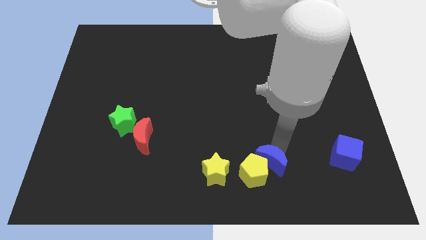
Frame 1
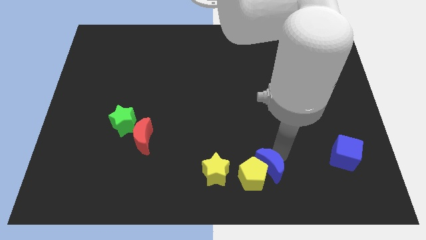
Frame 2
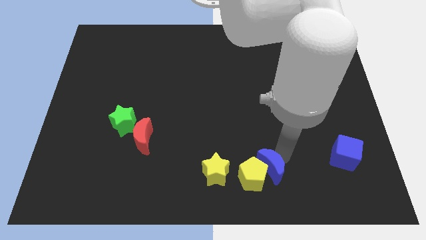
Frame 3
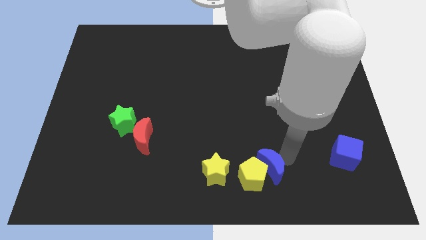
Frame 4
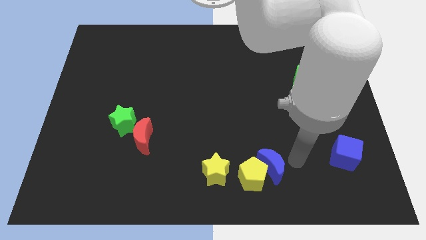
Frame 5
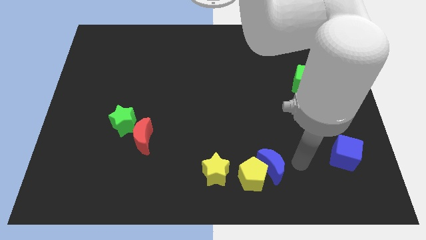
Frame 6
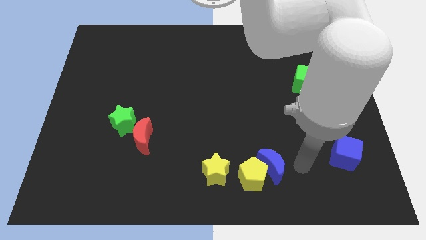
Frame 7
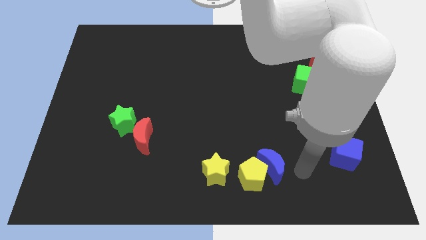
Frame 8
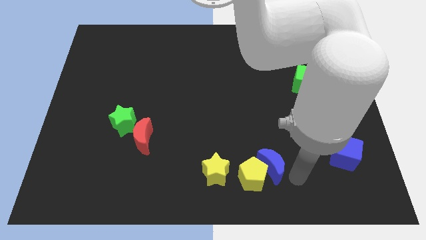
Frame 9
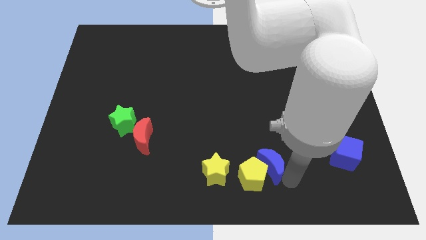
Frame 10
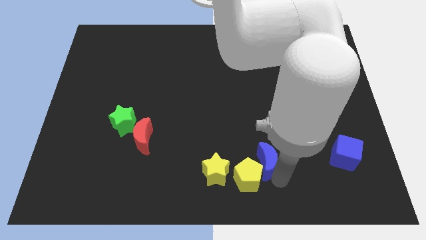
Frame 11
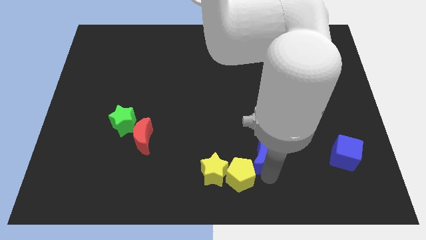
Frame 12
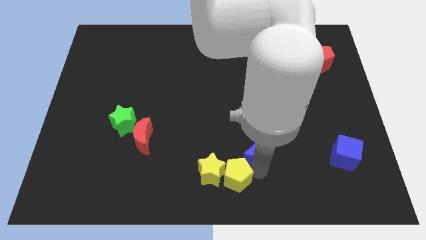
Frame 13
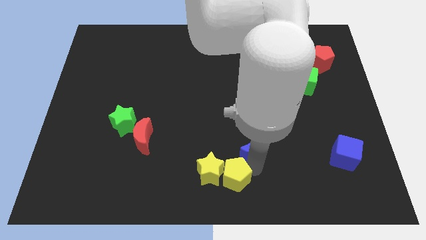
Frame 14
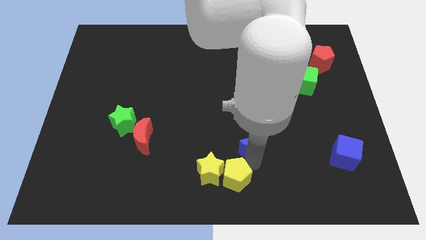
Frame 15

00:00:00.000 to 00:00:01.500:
move the blue moon above the yellow pentagon

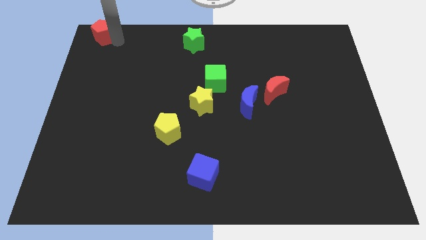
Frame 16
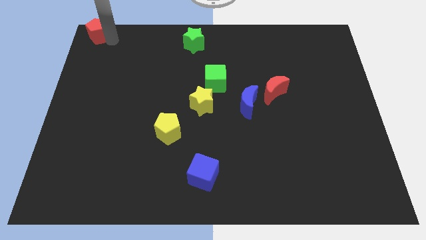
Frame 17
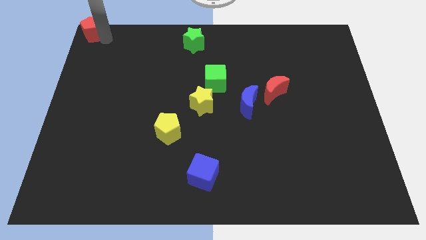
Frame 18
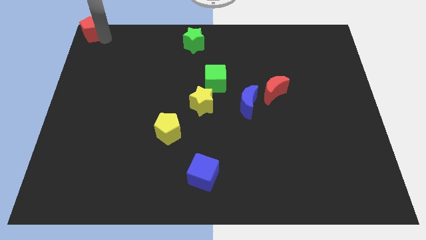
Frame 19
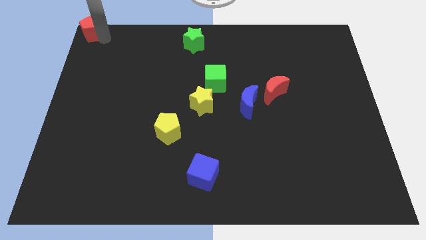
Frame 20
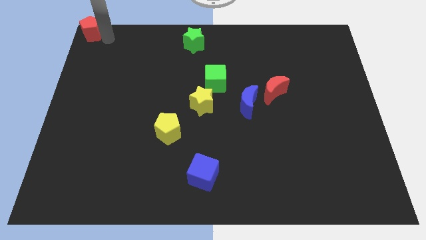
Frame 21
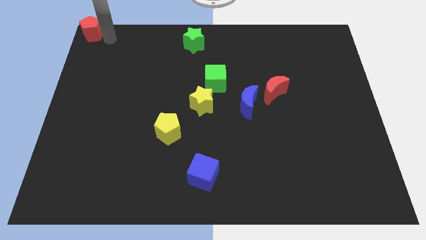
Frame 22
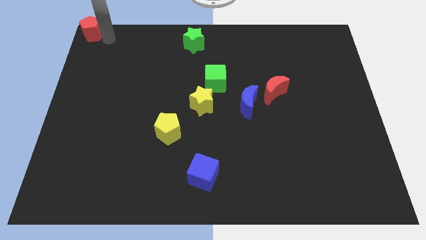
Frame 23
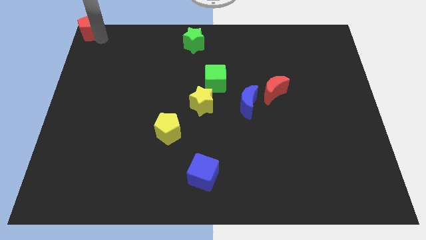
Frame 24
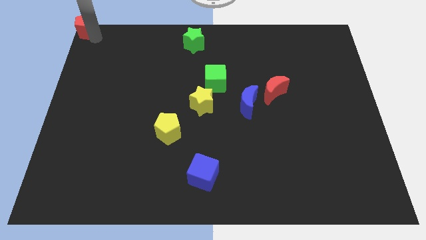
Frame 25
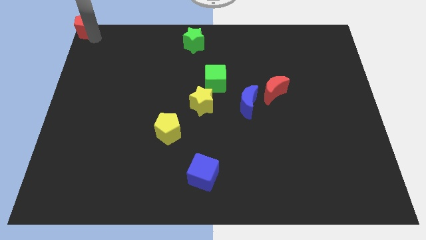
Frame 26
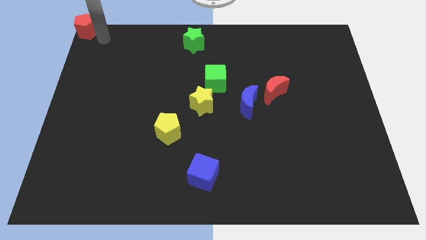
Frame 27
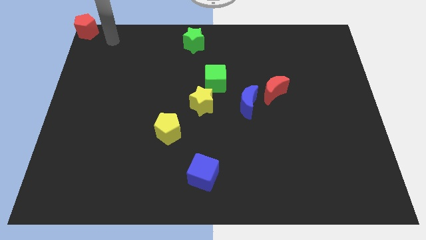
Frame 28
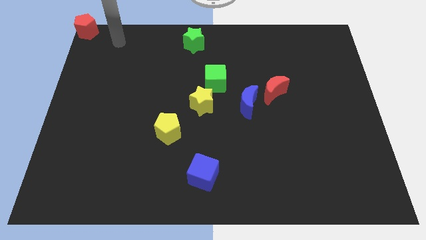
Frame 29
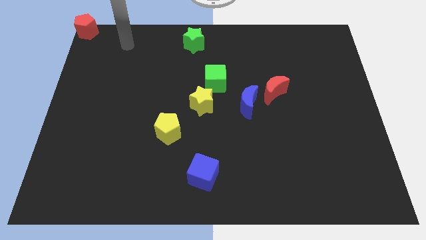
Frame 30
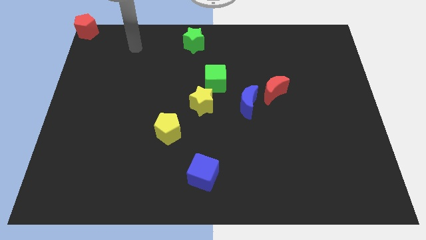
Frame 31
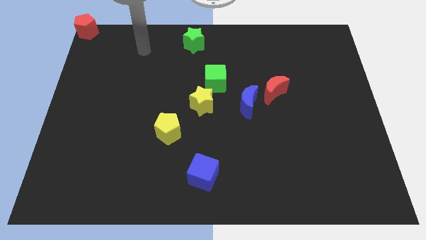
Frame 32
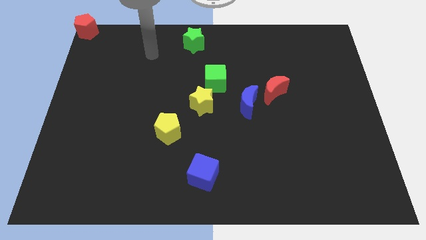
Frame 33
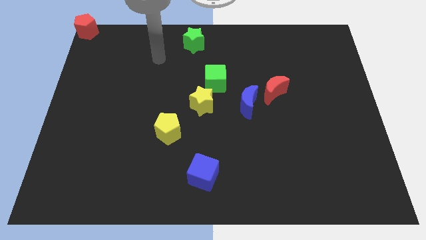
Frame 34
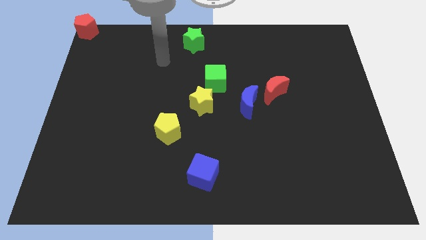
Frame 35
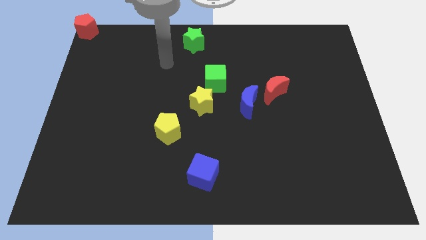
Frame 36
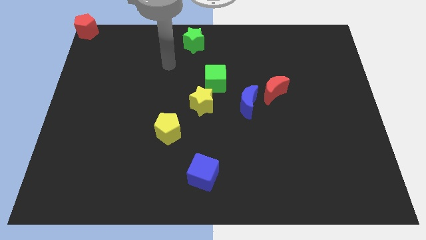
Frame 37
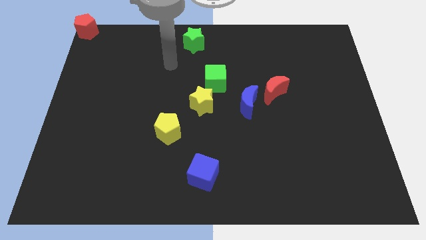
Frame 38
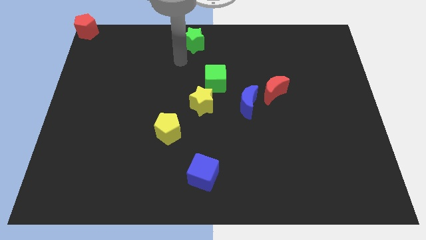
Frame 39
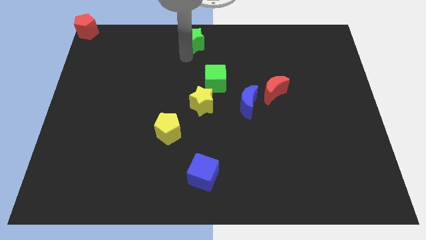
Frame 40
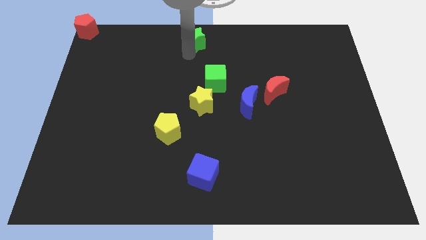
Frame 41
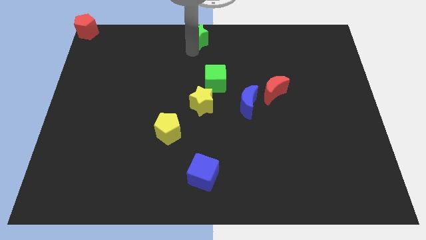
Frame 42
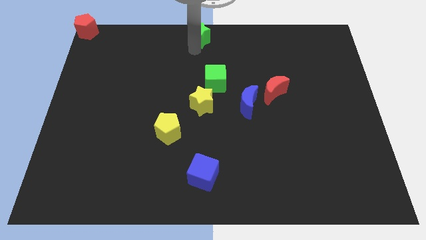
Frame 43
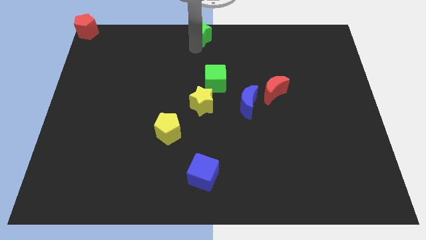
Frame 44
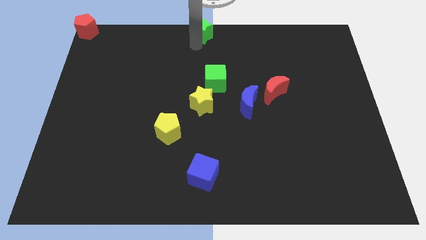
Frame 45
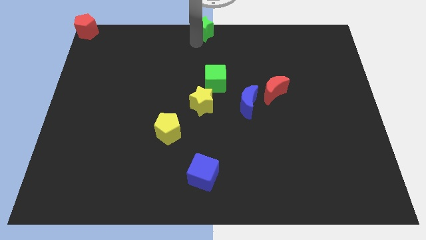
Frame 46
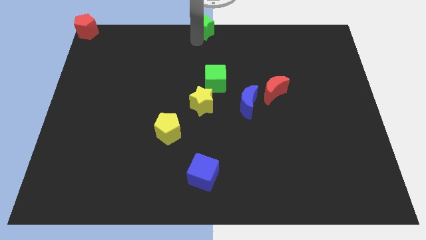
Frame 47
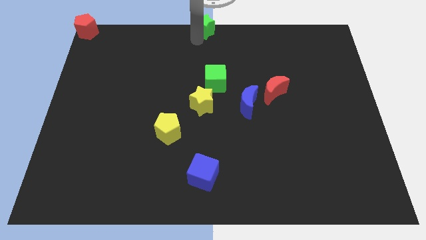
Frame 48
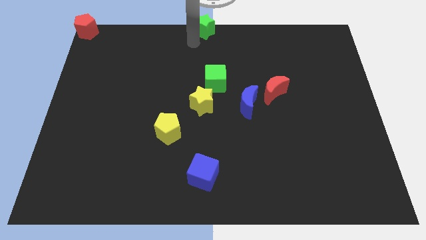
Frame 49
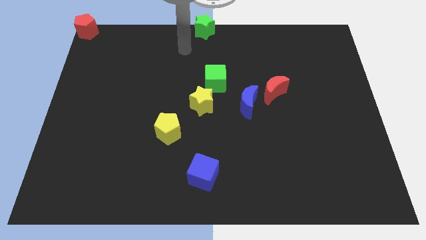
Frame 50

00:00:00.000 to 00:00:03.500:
place green star slightly towards the top

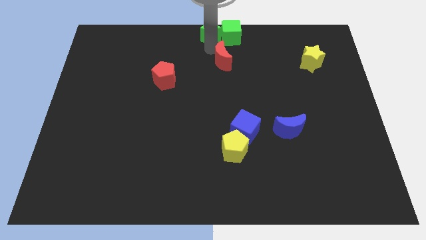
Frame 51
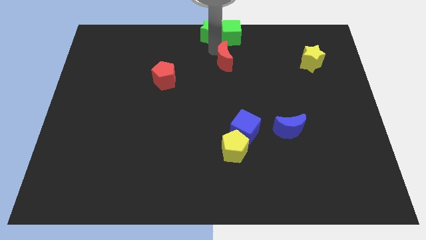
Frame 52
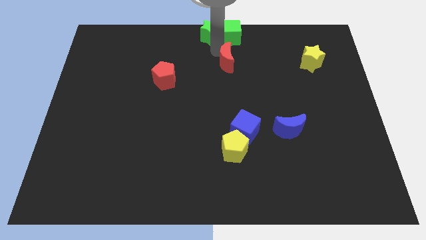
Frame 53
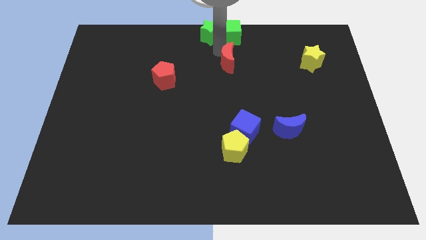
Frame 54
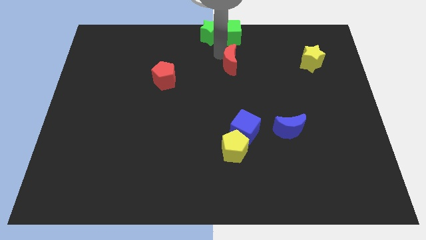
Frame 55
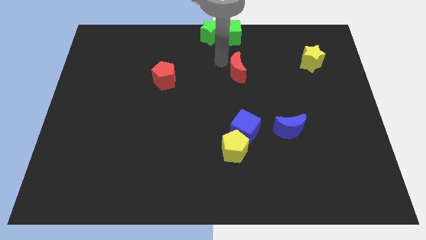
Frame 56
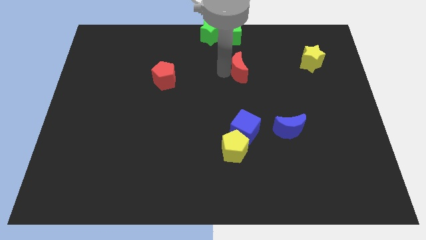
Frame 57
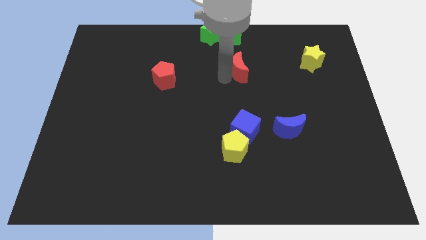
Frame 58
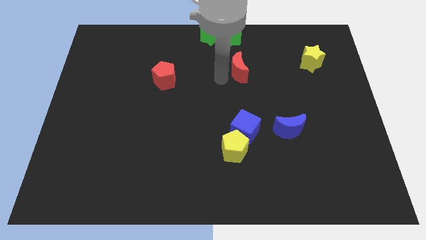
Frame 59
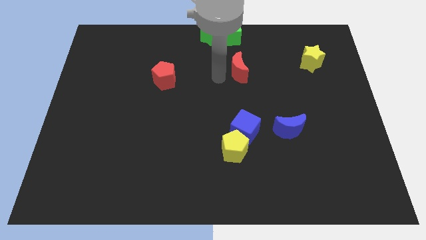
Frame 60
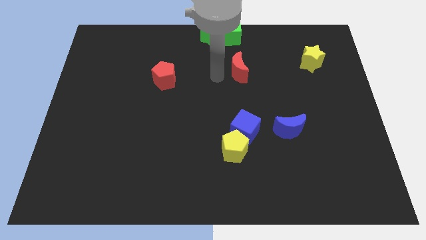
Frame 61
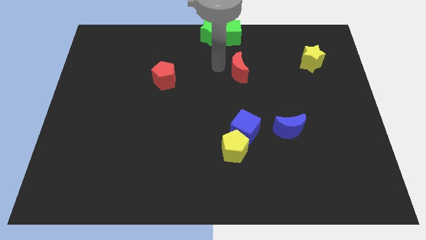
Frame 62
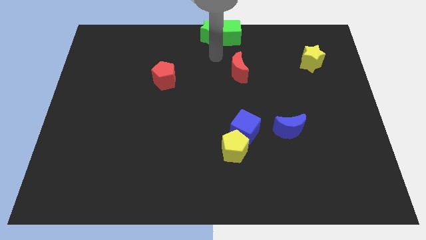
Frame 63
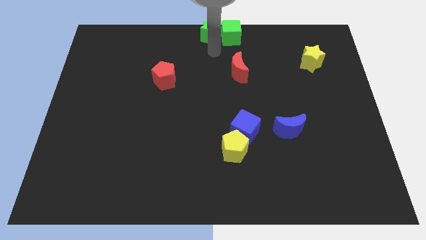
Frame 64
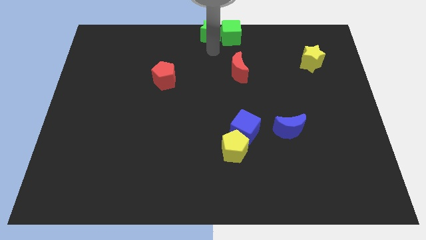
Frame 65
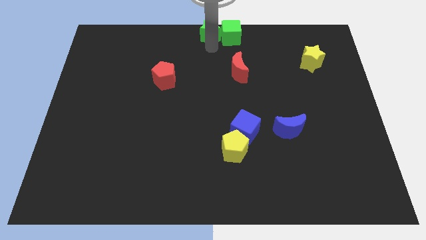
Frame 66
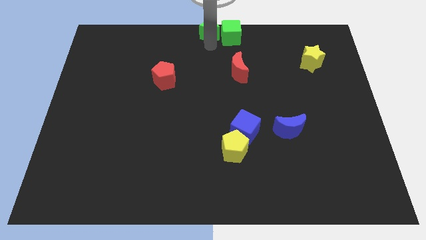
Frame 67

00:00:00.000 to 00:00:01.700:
move the red crescent to the center of the board

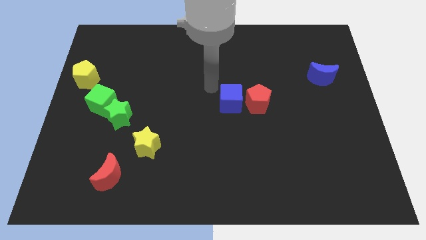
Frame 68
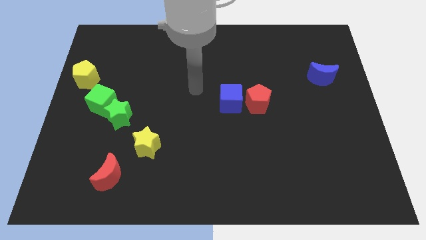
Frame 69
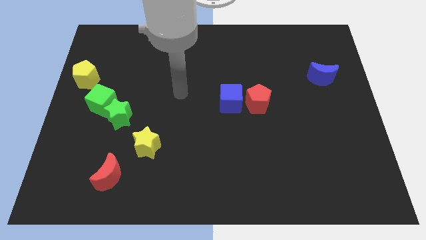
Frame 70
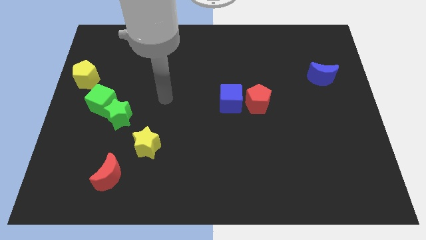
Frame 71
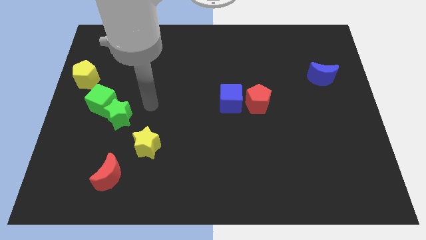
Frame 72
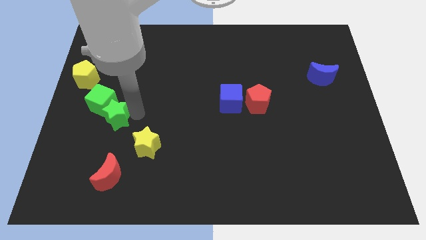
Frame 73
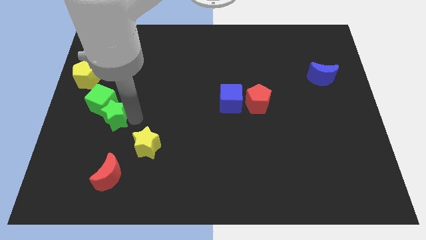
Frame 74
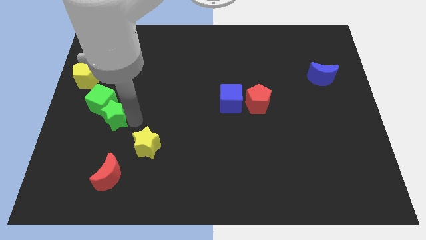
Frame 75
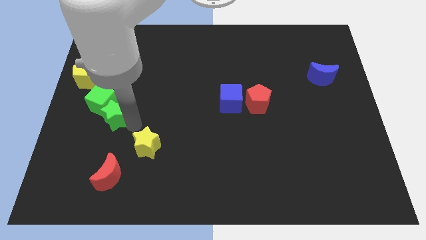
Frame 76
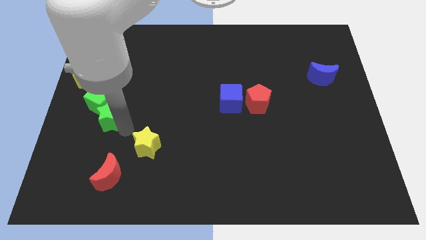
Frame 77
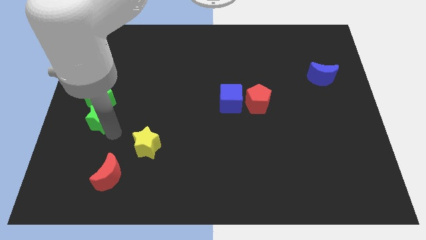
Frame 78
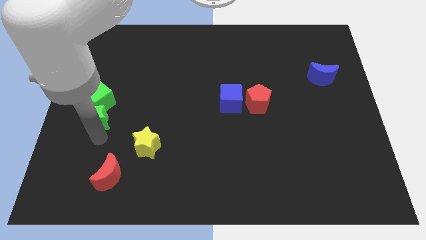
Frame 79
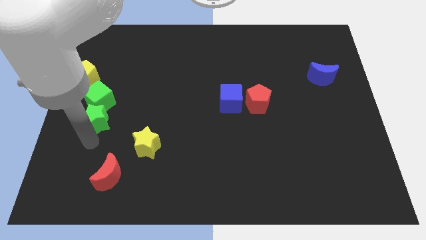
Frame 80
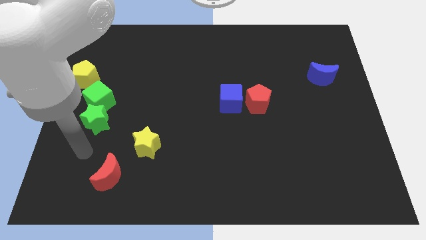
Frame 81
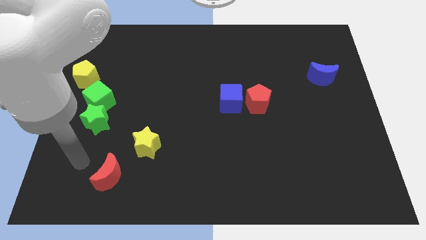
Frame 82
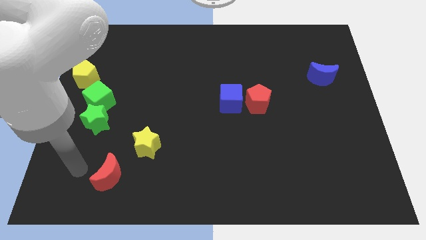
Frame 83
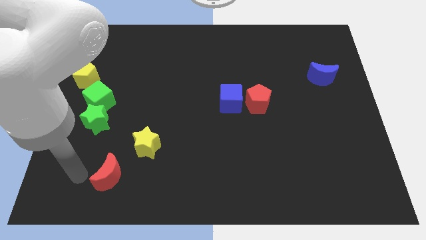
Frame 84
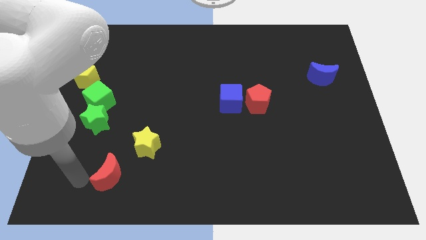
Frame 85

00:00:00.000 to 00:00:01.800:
point your arm at the left of the red crescent

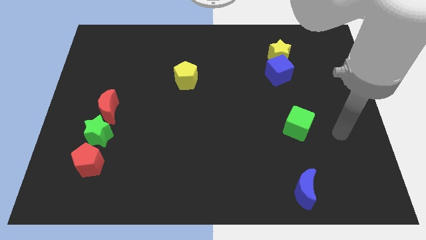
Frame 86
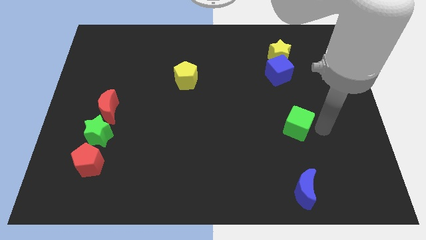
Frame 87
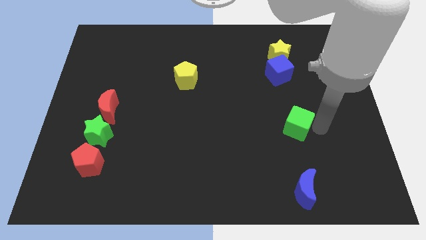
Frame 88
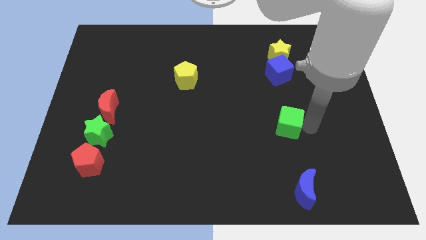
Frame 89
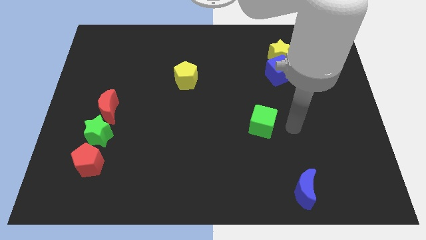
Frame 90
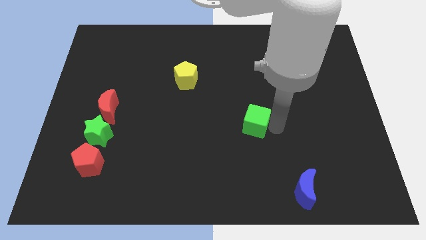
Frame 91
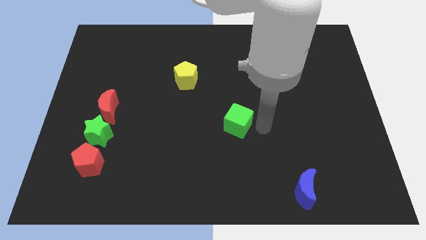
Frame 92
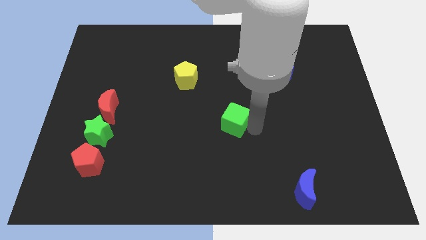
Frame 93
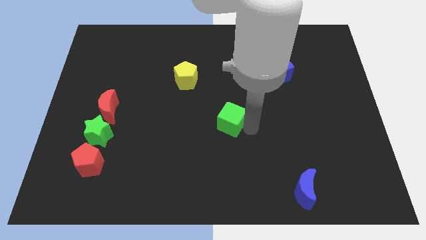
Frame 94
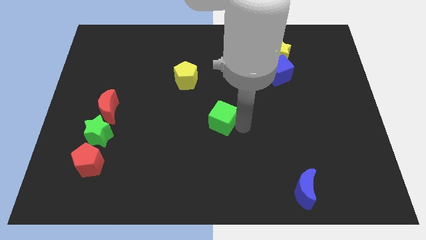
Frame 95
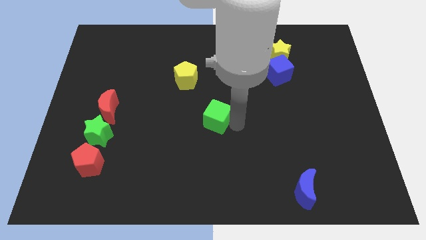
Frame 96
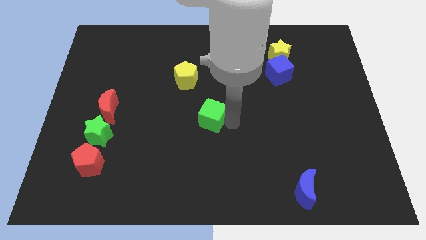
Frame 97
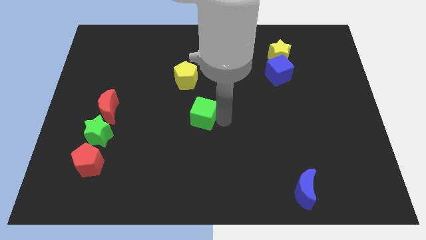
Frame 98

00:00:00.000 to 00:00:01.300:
push the green cube to the center of the board
